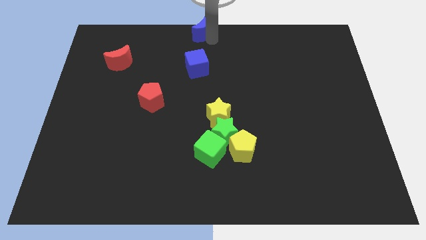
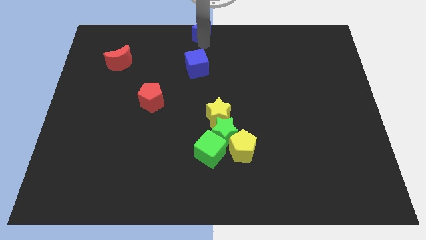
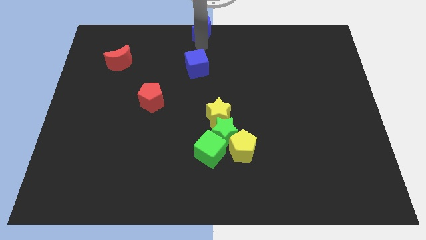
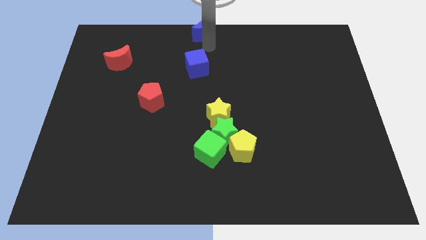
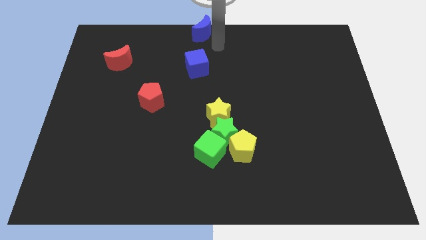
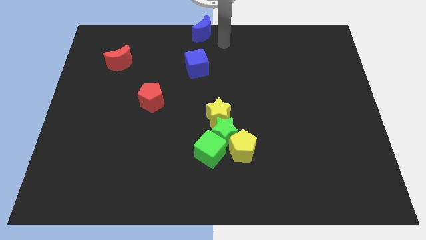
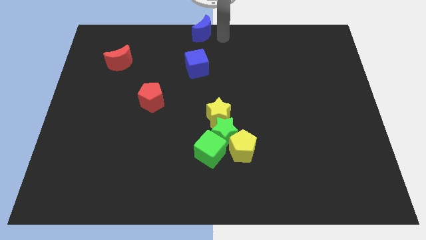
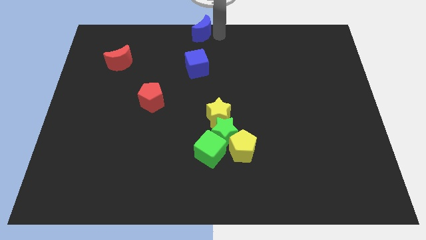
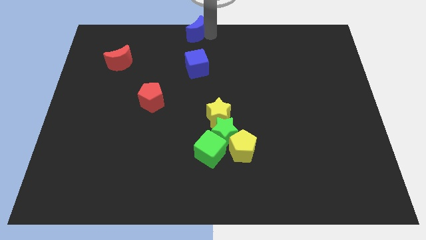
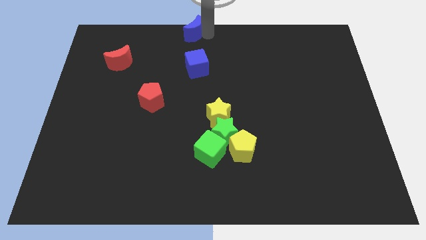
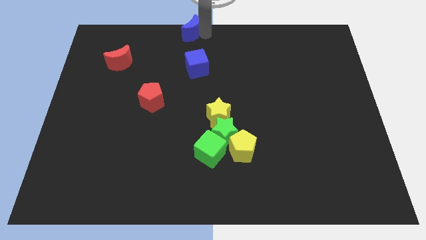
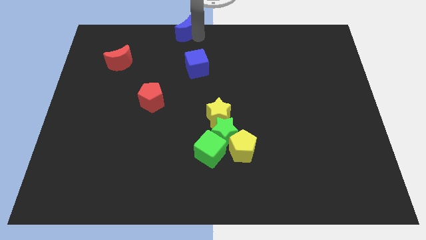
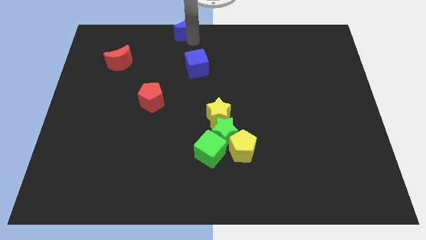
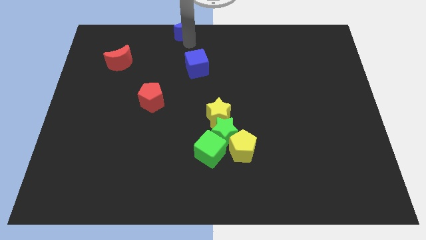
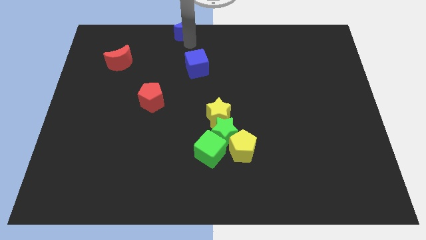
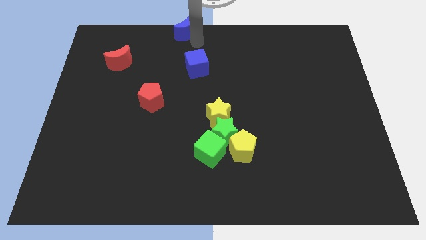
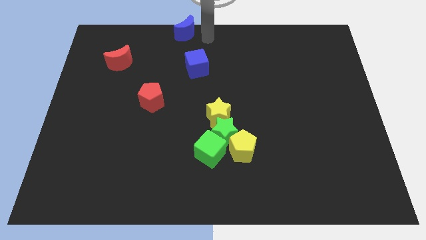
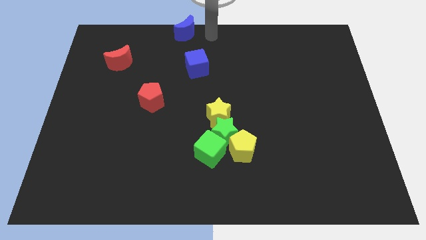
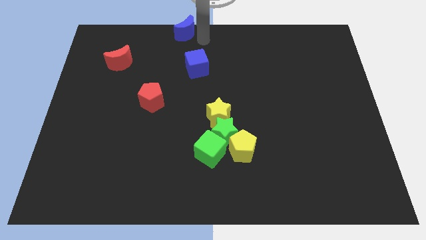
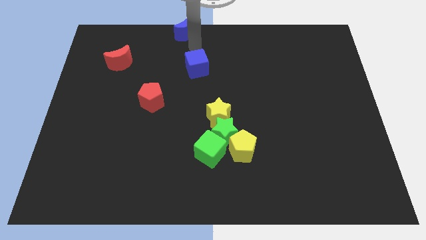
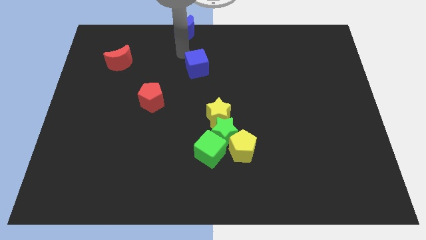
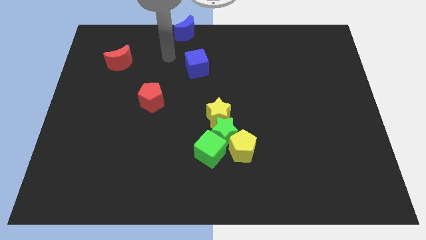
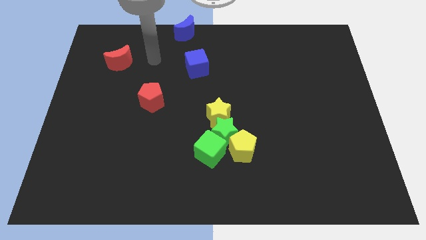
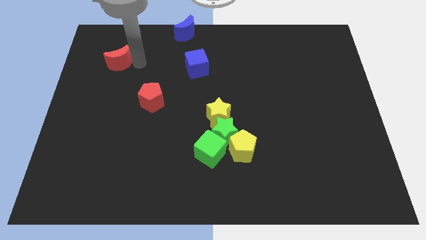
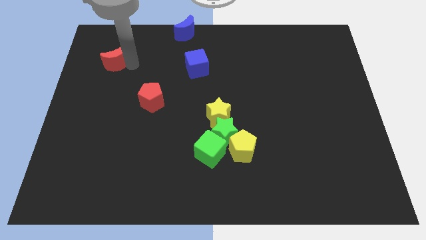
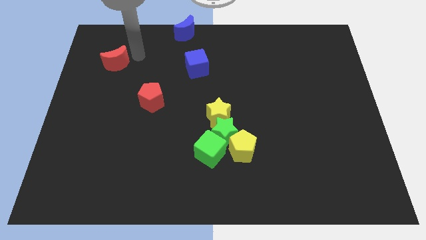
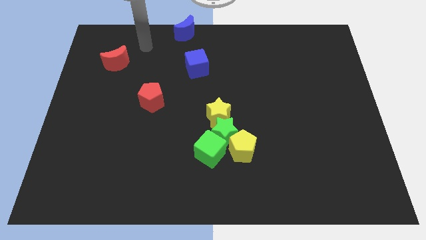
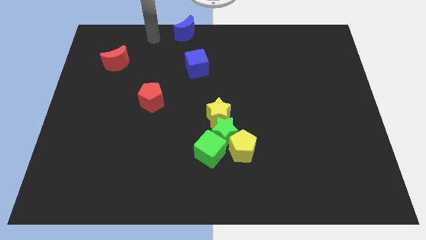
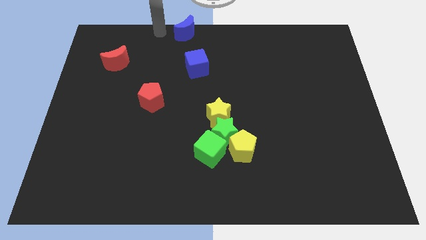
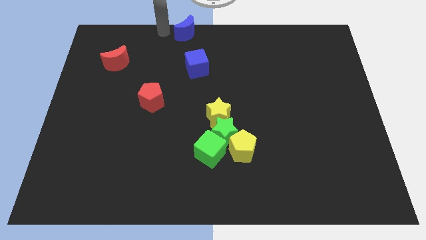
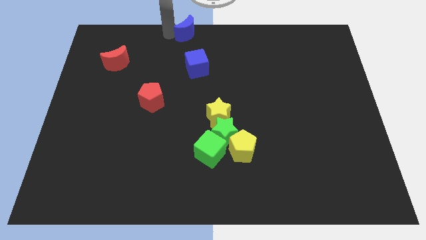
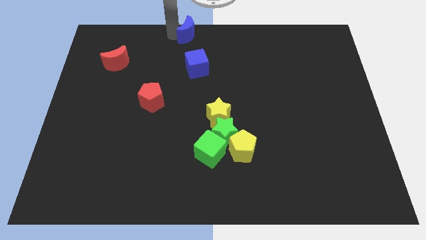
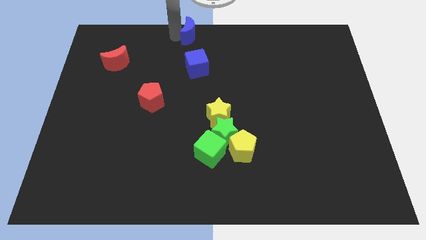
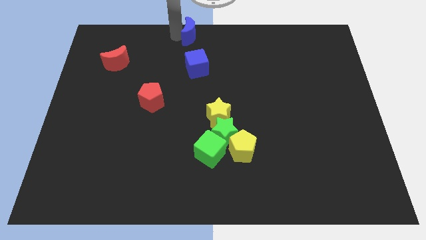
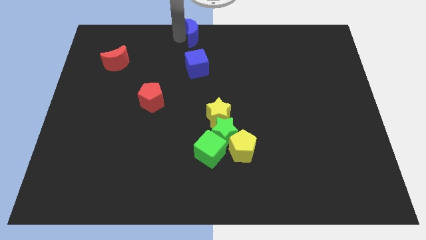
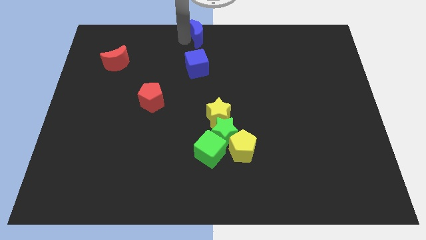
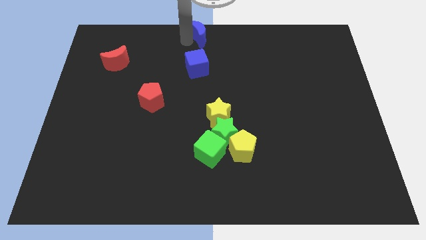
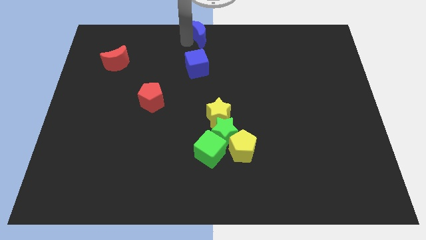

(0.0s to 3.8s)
place the blue moon on the top of blue cube

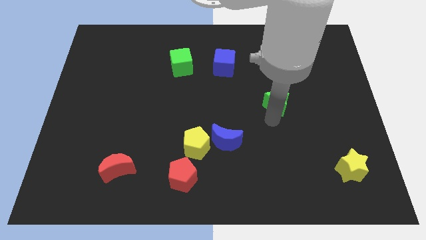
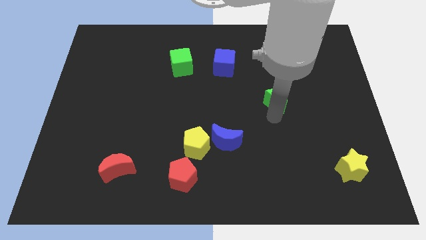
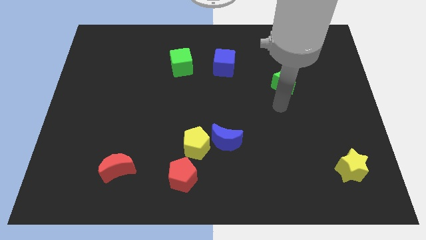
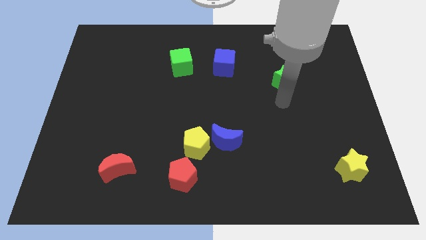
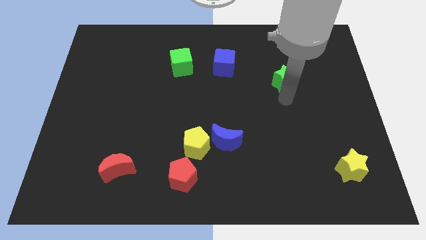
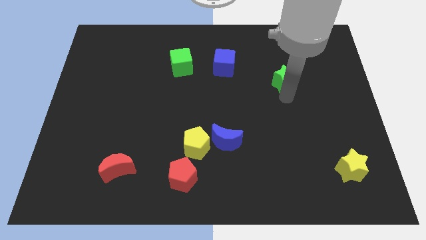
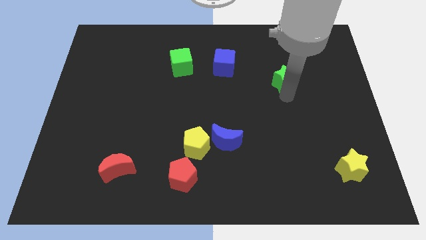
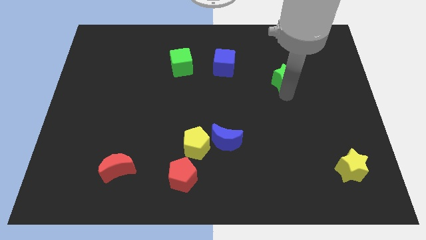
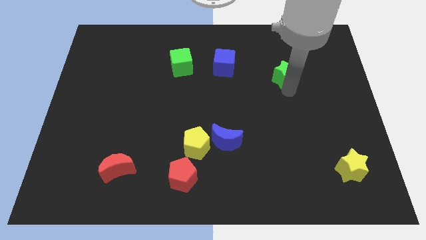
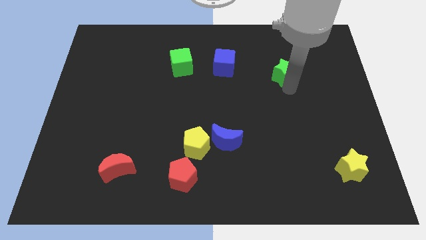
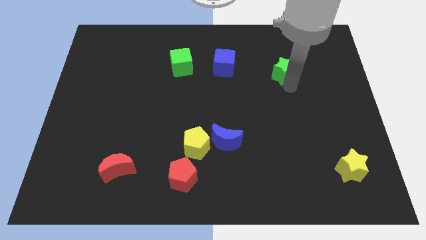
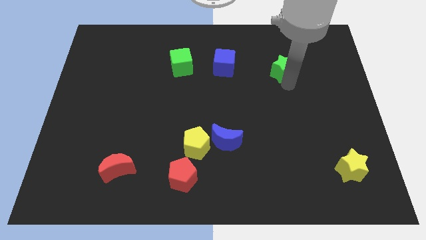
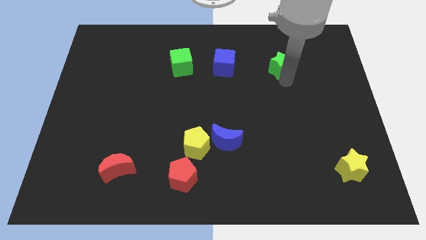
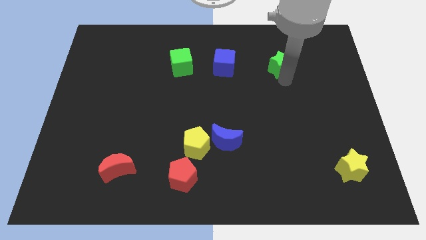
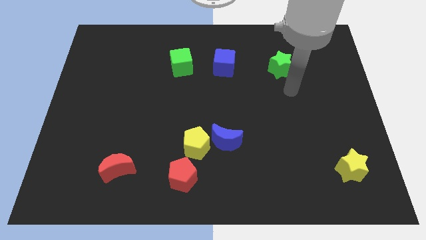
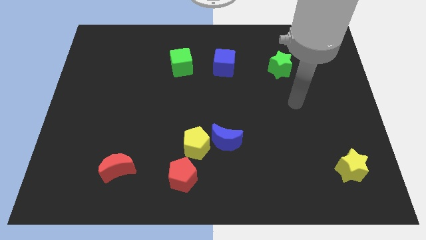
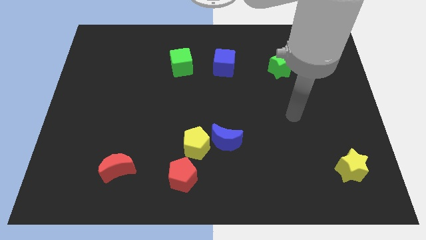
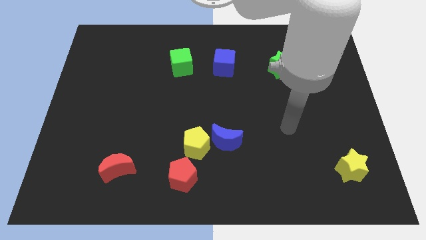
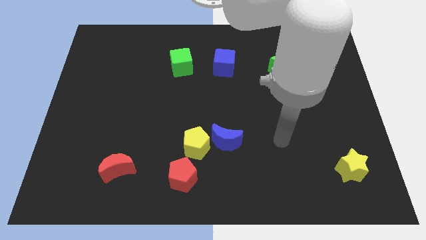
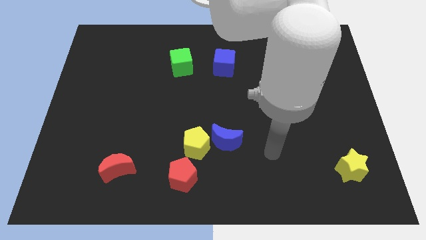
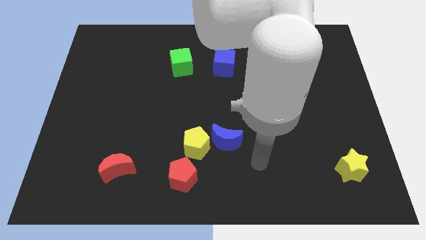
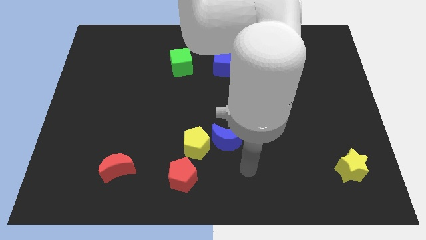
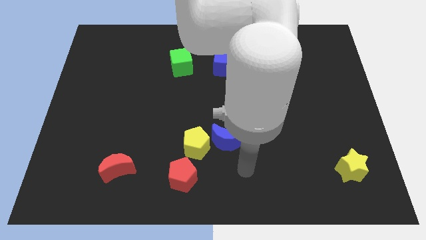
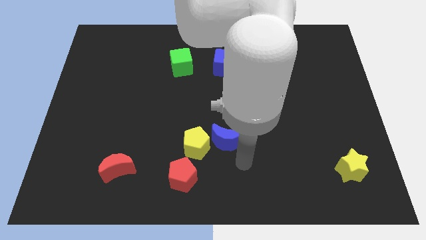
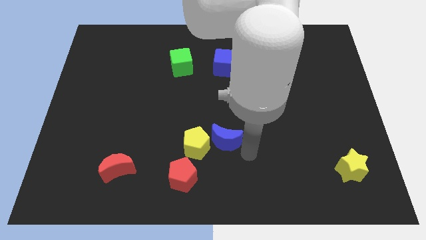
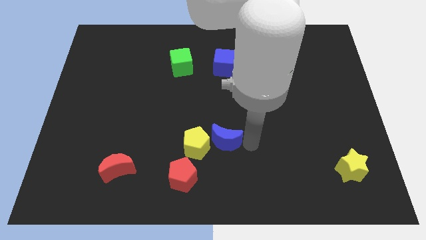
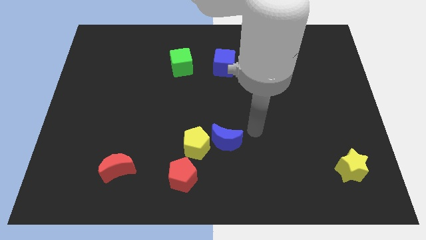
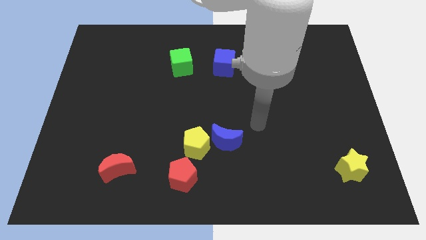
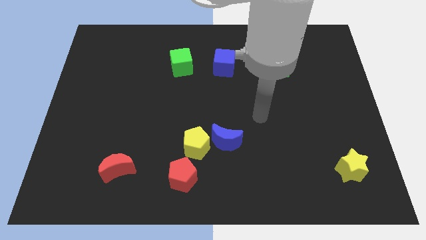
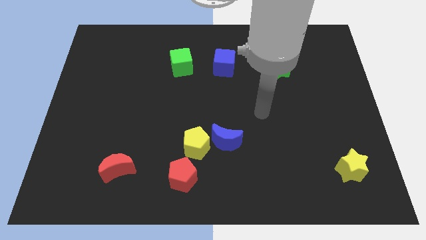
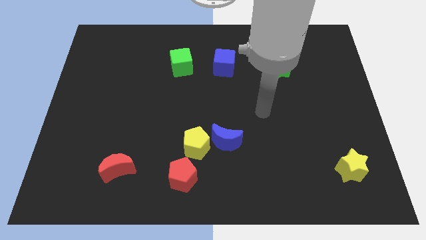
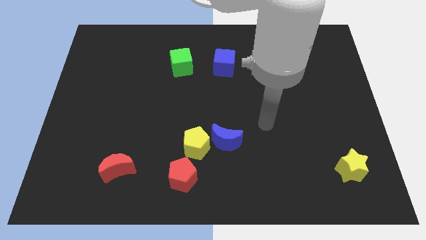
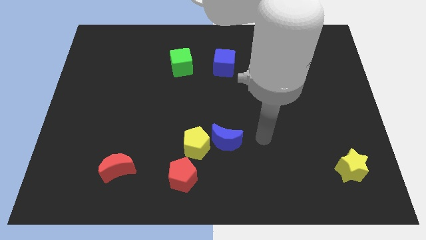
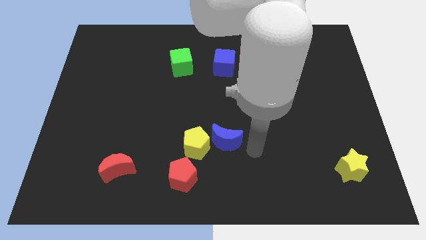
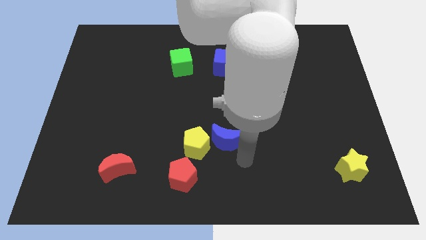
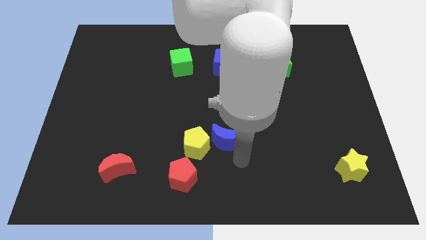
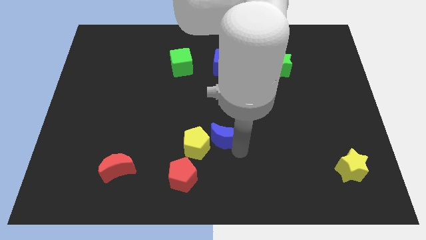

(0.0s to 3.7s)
move the green star parallel right to the blue cube

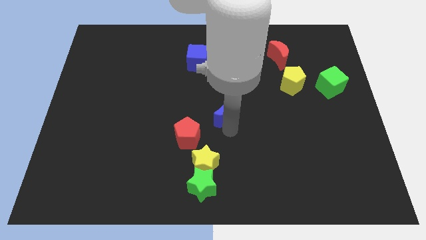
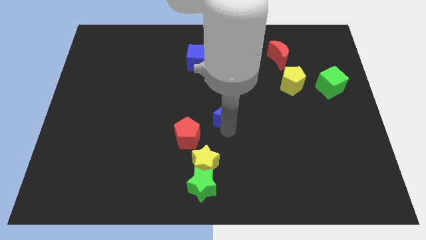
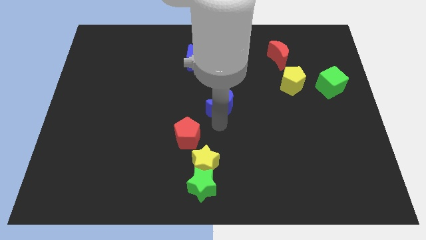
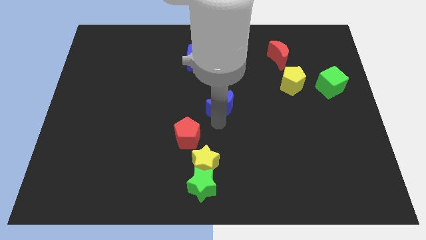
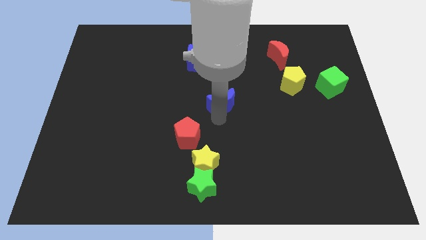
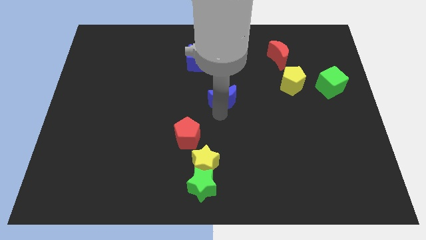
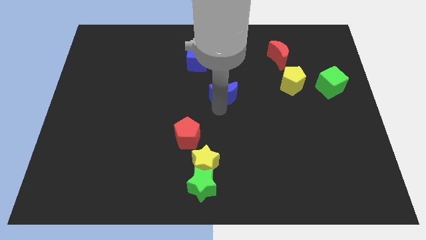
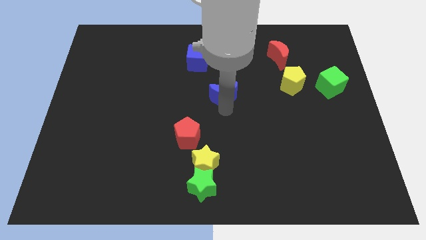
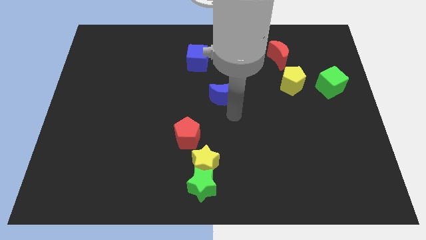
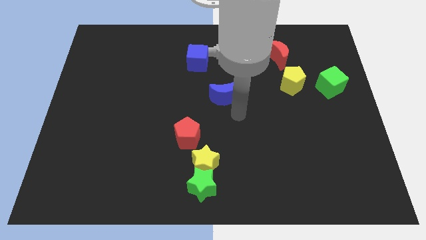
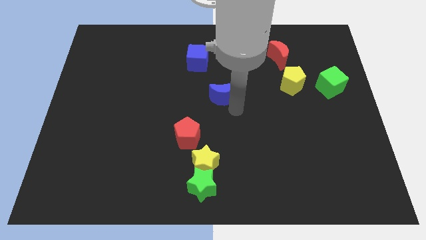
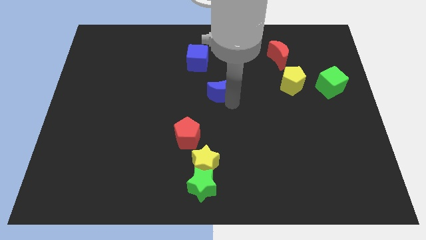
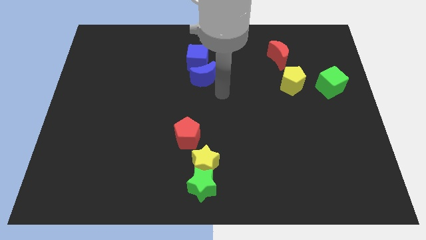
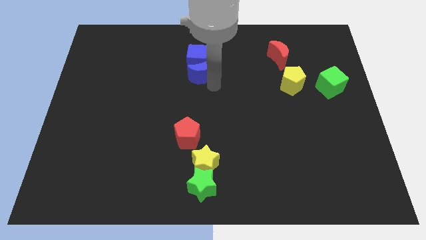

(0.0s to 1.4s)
push the blue moon into the blue cube
